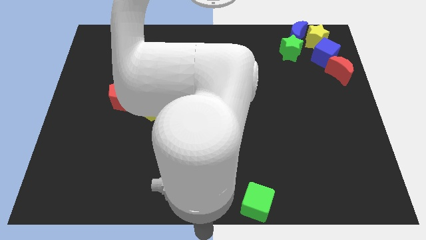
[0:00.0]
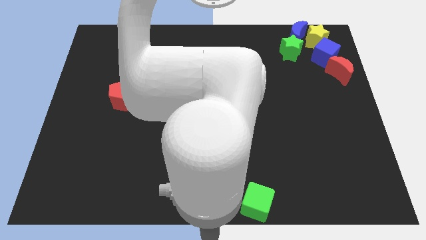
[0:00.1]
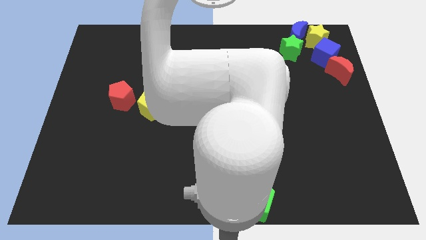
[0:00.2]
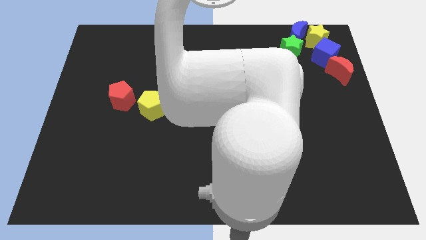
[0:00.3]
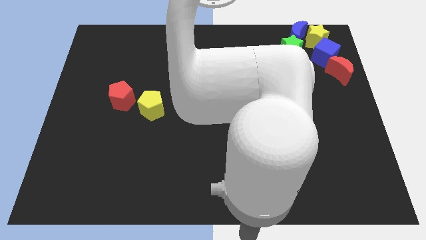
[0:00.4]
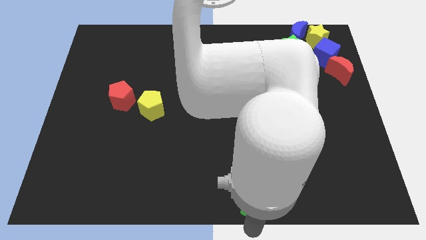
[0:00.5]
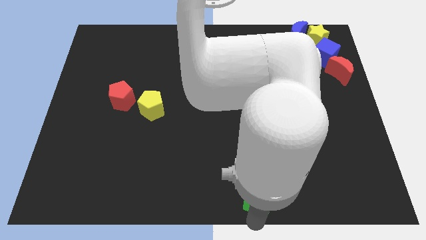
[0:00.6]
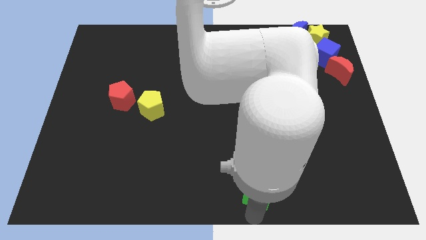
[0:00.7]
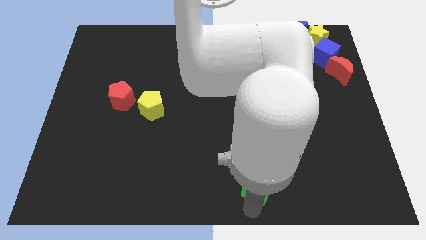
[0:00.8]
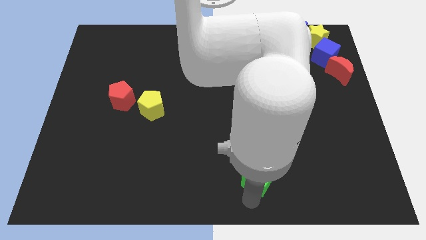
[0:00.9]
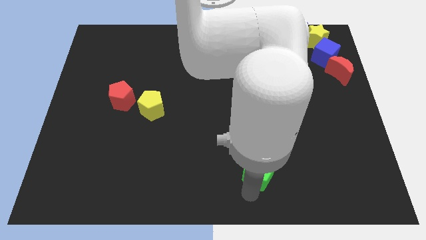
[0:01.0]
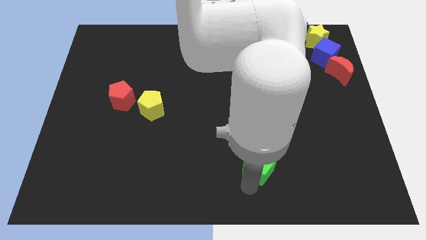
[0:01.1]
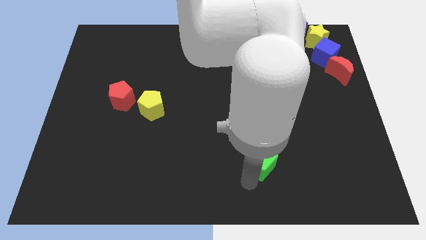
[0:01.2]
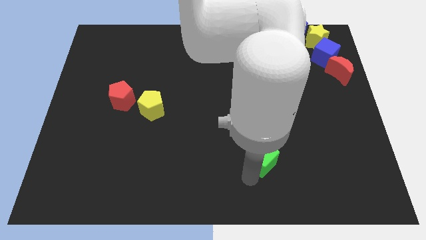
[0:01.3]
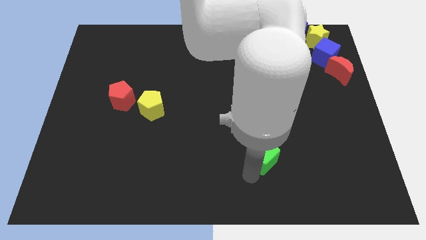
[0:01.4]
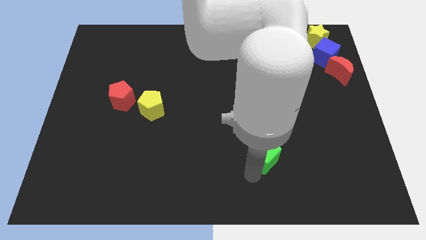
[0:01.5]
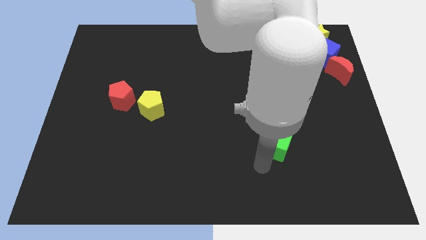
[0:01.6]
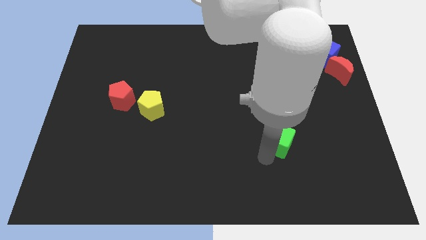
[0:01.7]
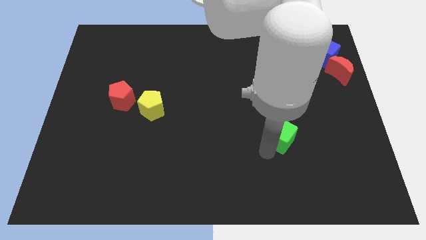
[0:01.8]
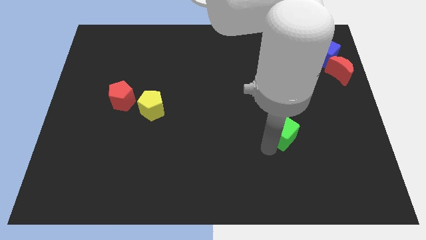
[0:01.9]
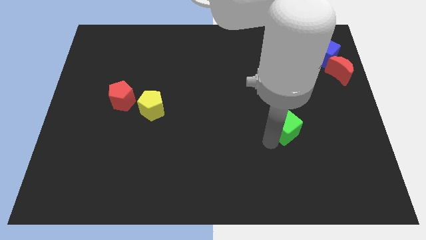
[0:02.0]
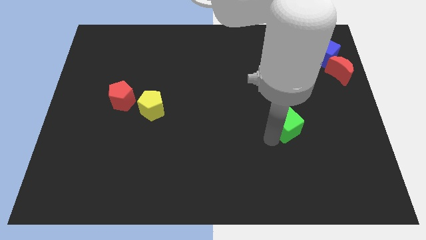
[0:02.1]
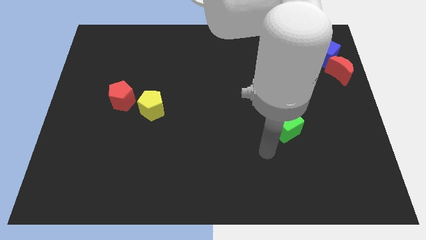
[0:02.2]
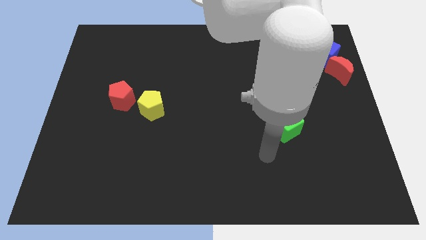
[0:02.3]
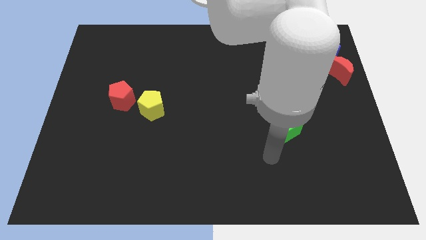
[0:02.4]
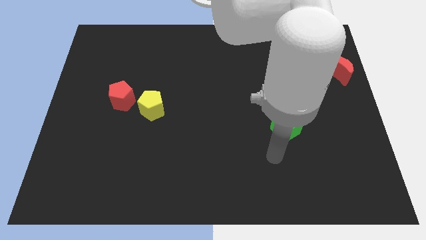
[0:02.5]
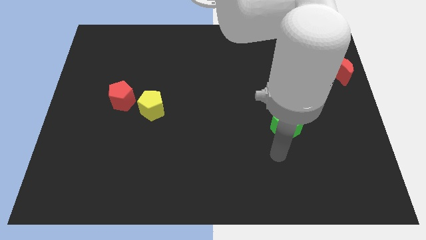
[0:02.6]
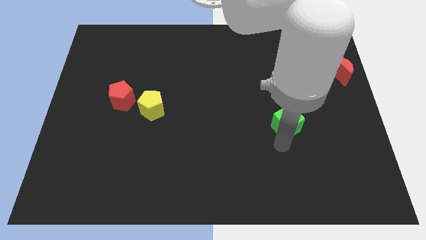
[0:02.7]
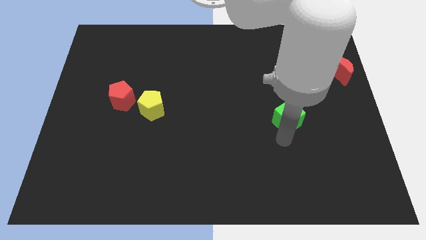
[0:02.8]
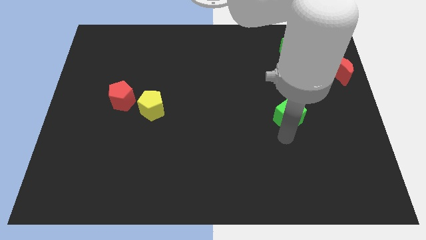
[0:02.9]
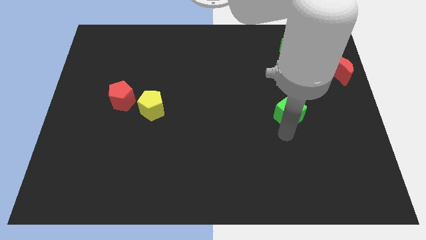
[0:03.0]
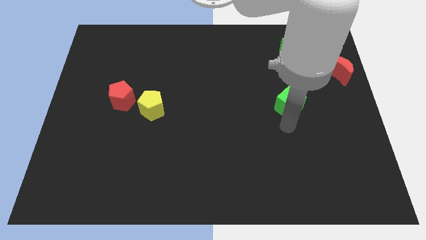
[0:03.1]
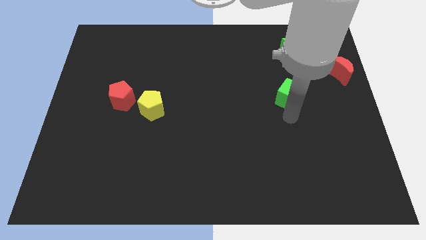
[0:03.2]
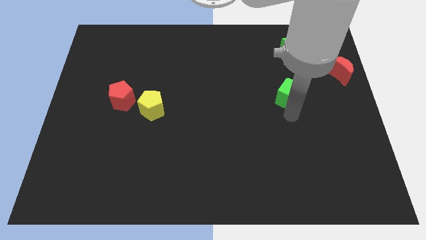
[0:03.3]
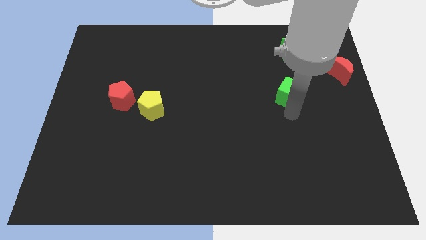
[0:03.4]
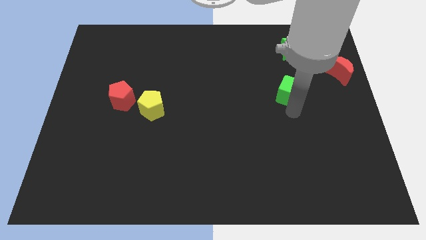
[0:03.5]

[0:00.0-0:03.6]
move the green cube in the upward direction

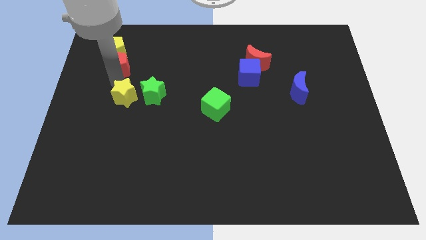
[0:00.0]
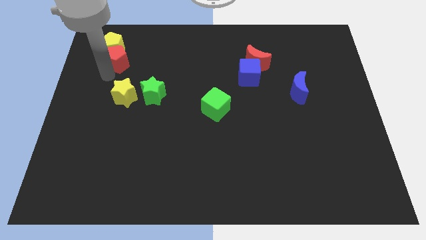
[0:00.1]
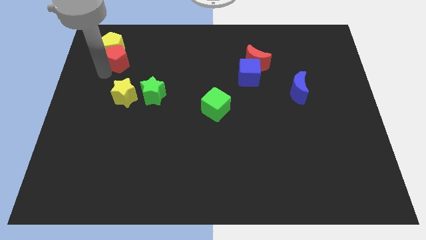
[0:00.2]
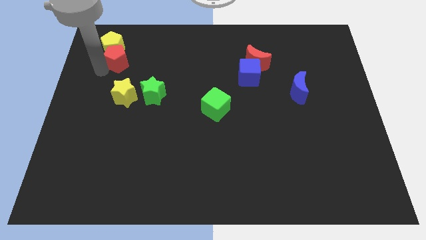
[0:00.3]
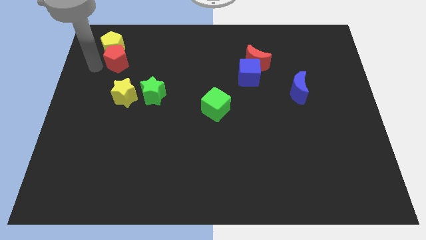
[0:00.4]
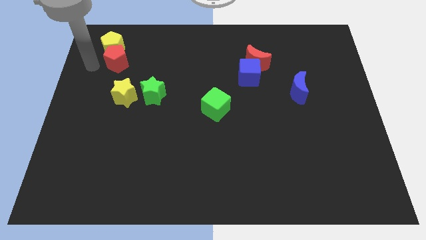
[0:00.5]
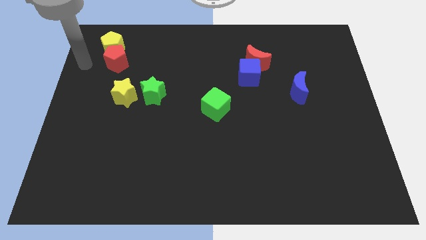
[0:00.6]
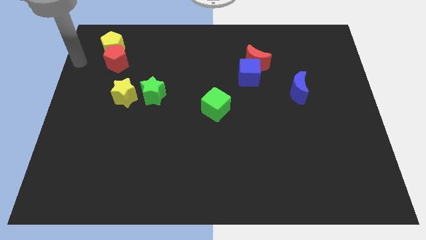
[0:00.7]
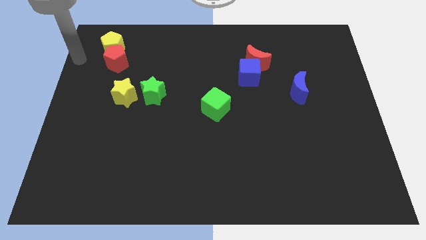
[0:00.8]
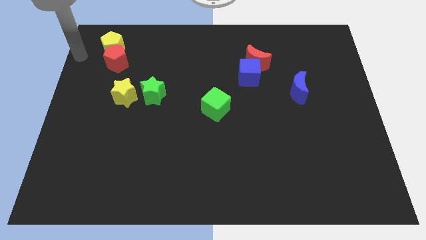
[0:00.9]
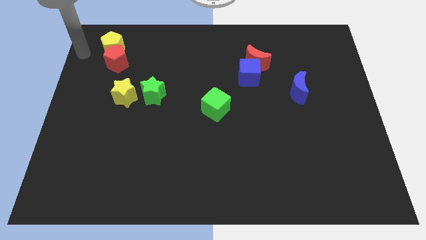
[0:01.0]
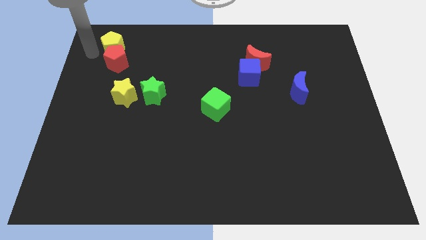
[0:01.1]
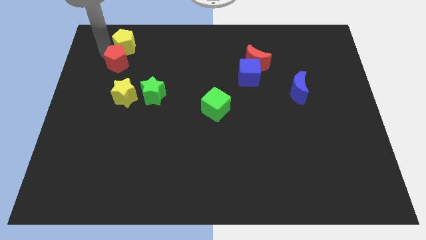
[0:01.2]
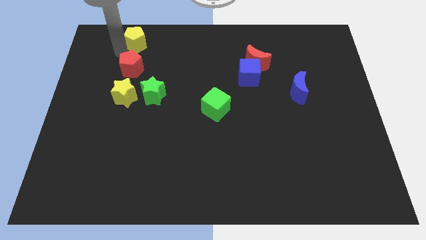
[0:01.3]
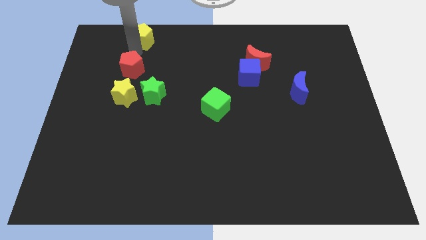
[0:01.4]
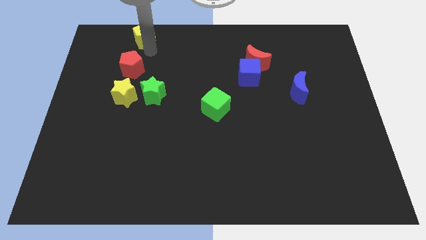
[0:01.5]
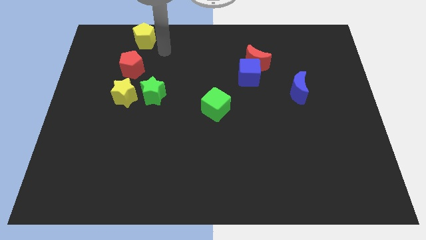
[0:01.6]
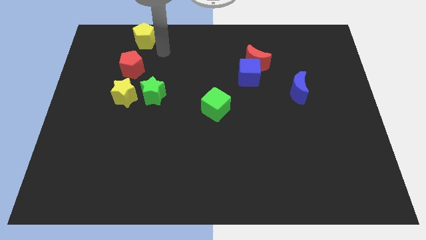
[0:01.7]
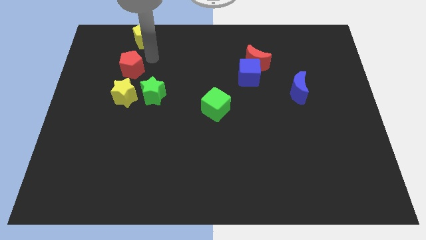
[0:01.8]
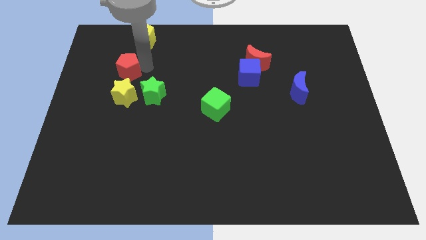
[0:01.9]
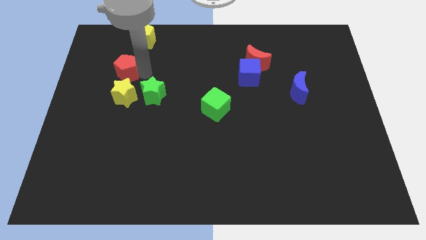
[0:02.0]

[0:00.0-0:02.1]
separate yellow and red pentagons

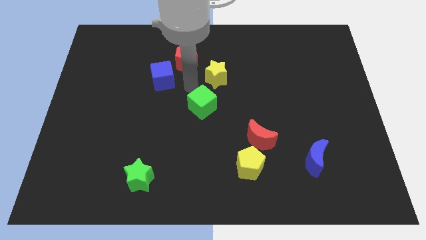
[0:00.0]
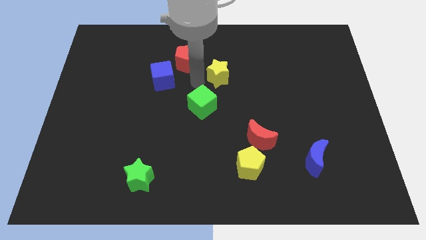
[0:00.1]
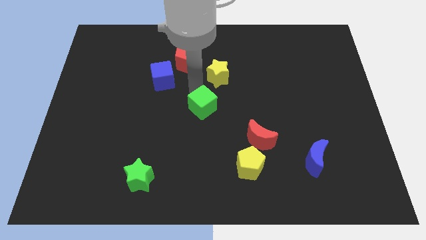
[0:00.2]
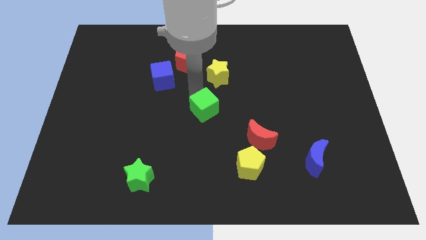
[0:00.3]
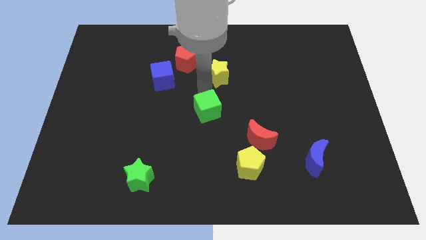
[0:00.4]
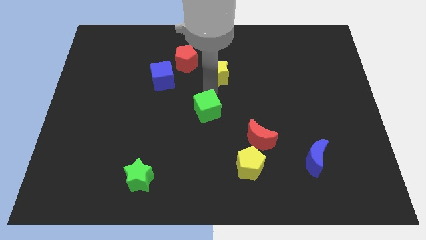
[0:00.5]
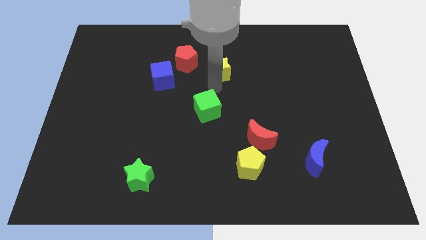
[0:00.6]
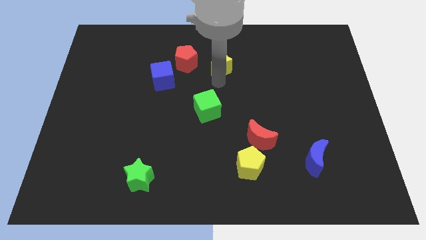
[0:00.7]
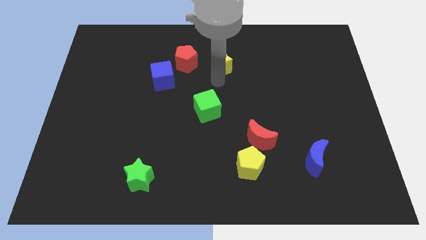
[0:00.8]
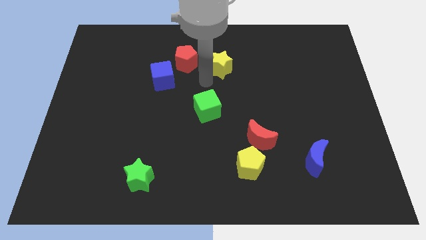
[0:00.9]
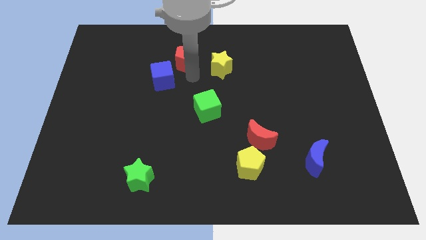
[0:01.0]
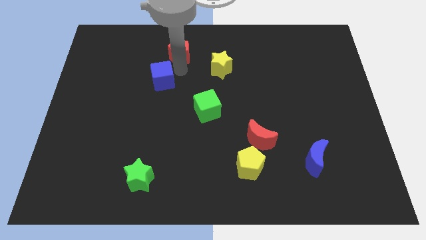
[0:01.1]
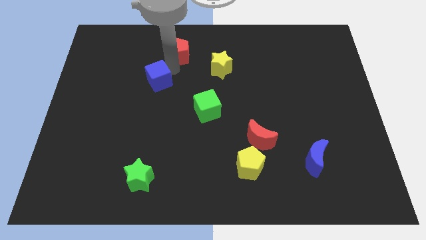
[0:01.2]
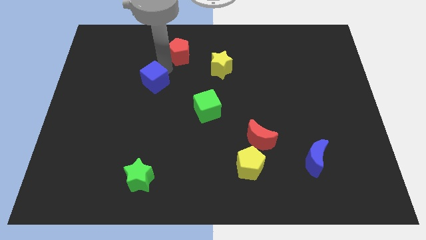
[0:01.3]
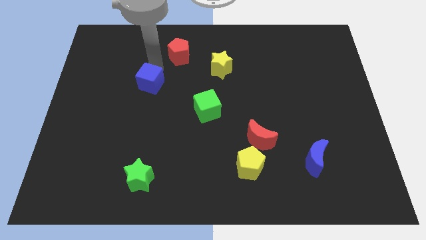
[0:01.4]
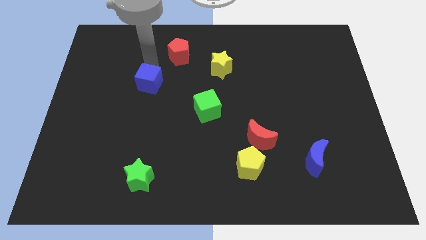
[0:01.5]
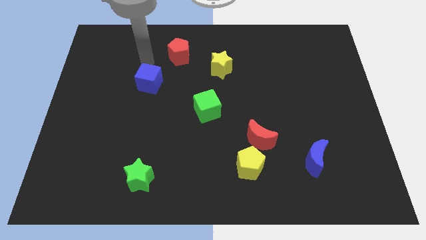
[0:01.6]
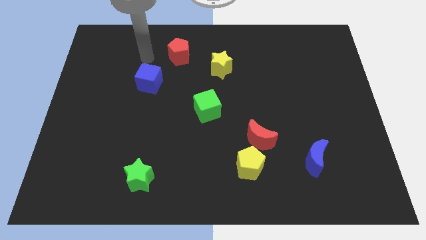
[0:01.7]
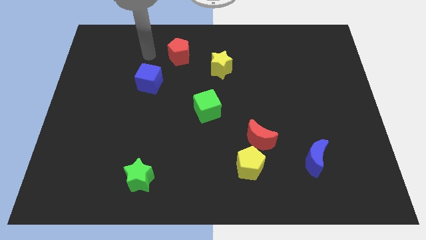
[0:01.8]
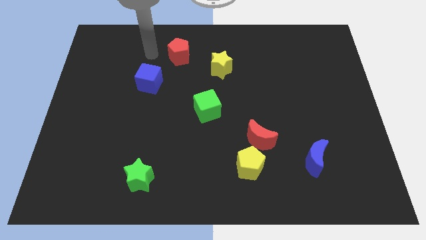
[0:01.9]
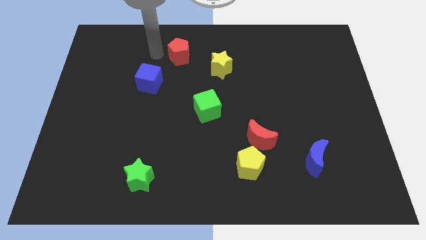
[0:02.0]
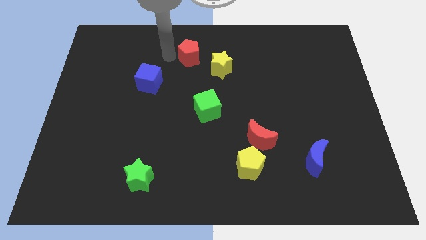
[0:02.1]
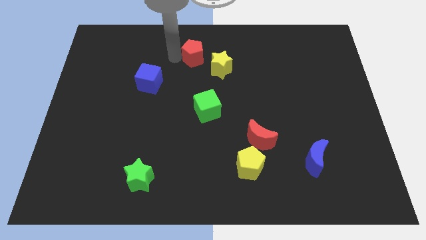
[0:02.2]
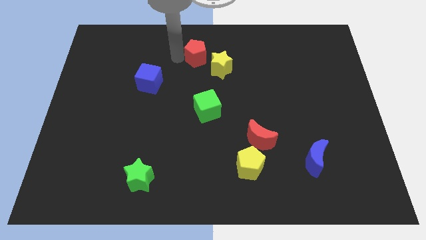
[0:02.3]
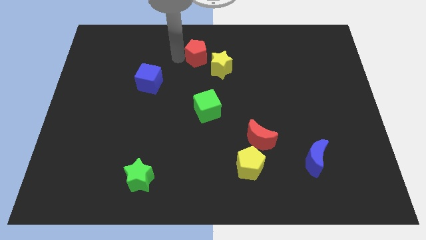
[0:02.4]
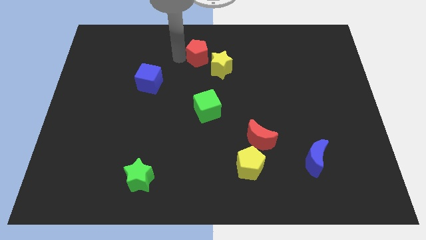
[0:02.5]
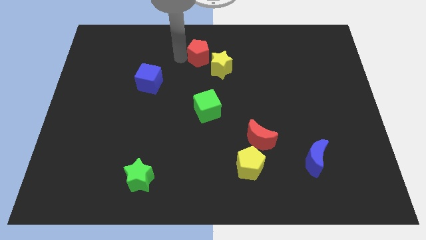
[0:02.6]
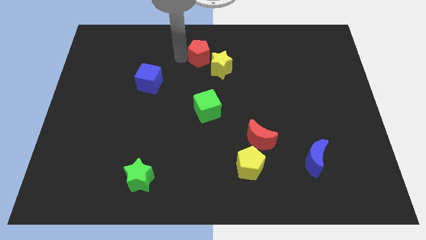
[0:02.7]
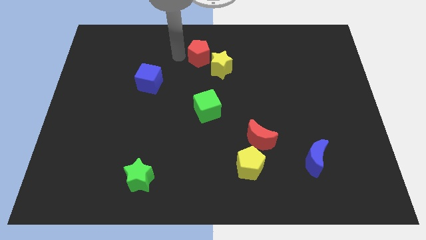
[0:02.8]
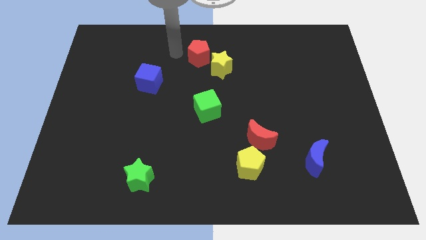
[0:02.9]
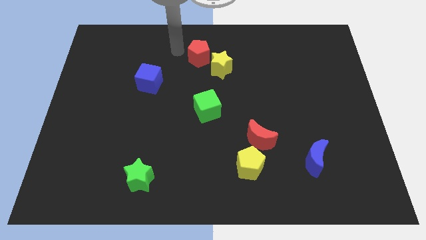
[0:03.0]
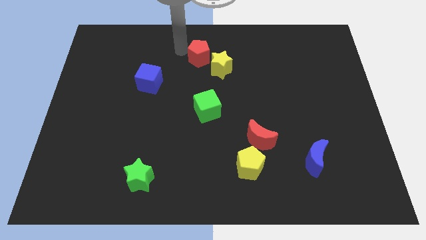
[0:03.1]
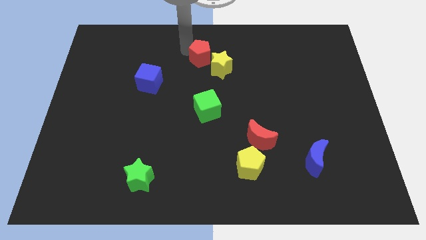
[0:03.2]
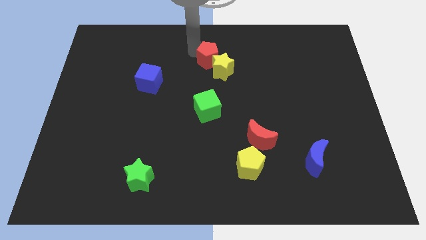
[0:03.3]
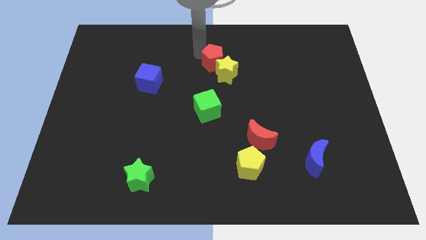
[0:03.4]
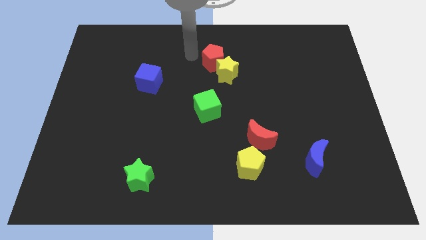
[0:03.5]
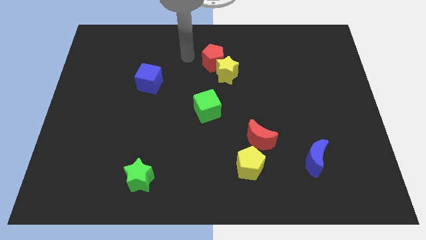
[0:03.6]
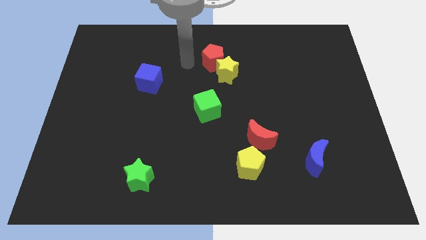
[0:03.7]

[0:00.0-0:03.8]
push the red pentagon into the yellow star
